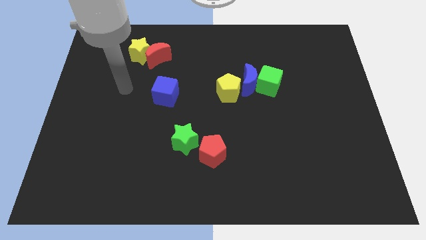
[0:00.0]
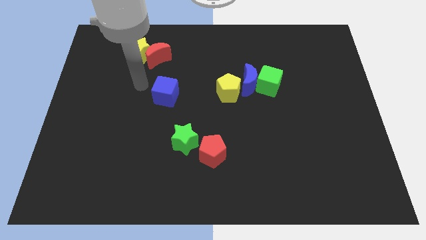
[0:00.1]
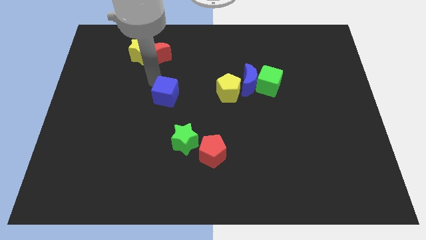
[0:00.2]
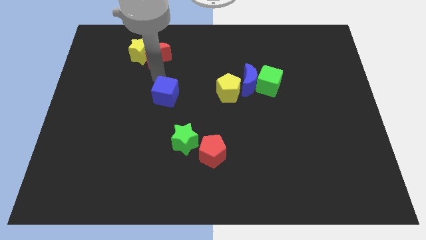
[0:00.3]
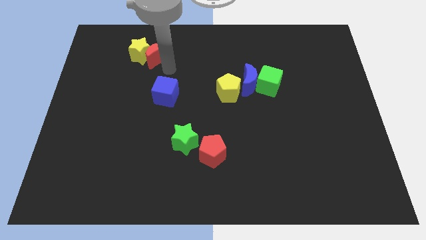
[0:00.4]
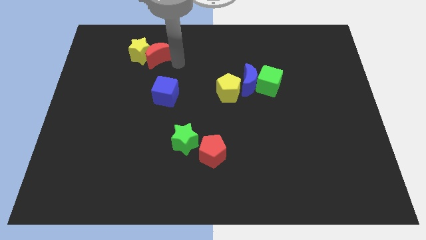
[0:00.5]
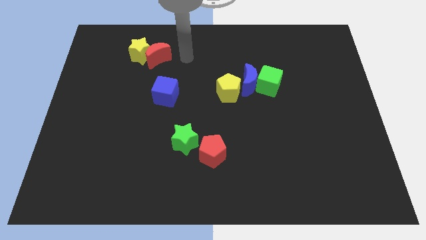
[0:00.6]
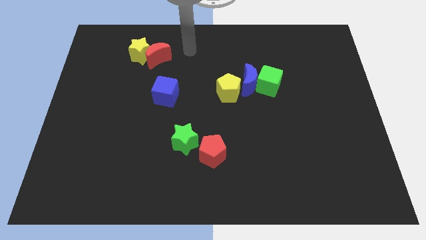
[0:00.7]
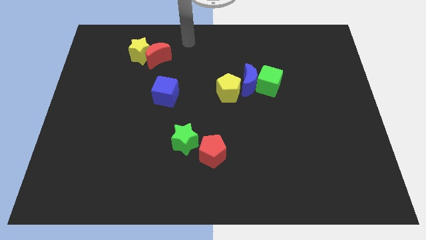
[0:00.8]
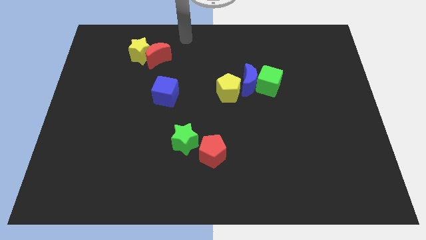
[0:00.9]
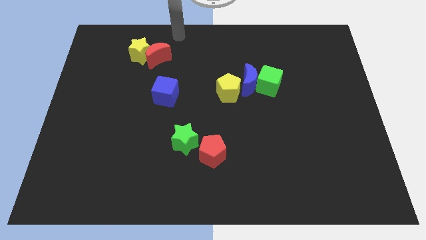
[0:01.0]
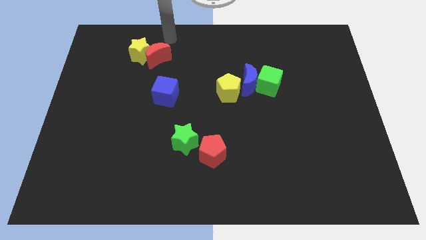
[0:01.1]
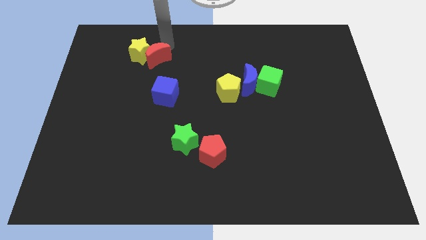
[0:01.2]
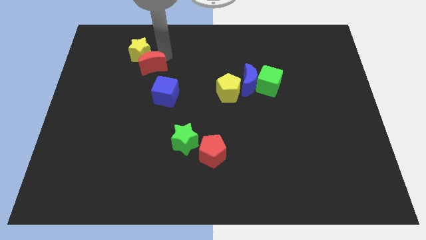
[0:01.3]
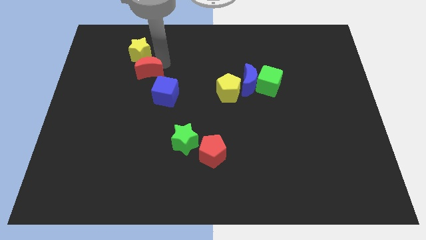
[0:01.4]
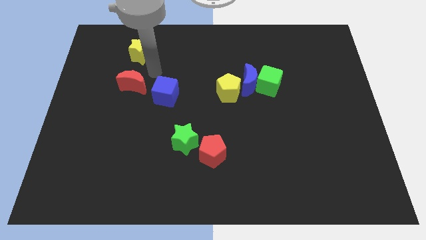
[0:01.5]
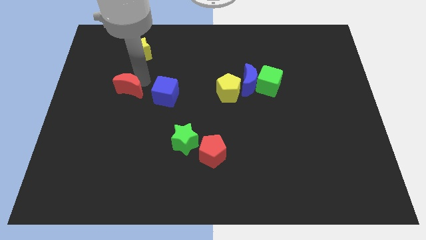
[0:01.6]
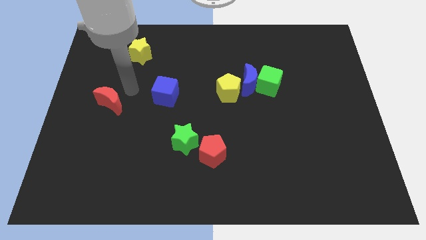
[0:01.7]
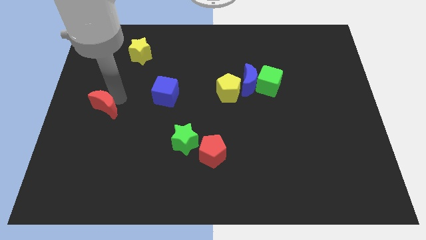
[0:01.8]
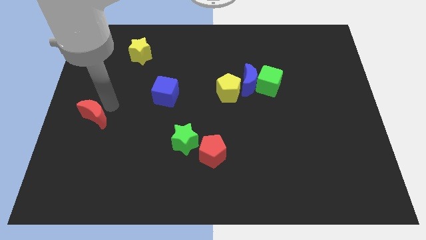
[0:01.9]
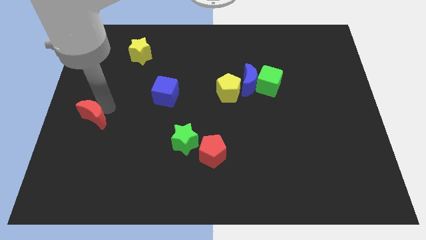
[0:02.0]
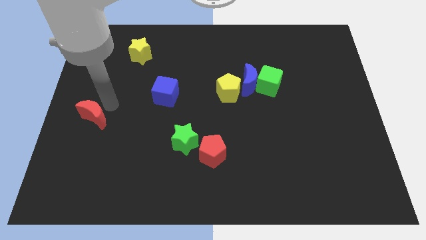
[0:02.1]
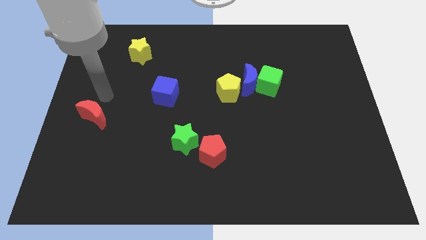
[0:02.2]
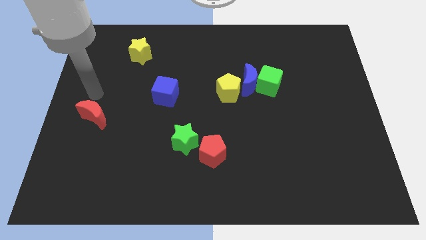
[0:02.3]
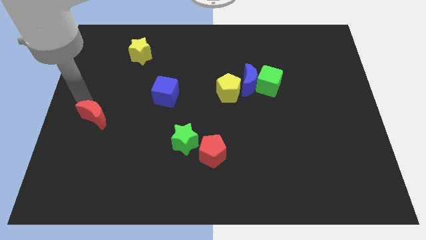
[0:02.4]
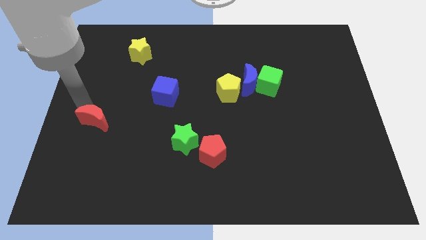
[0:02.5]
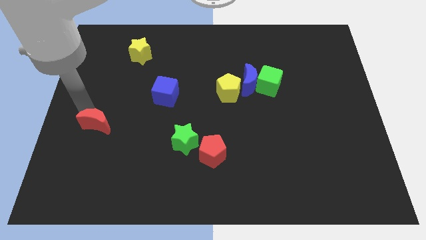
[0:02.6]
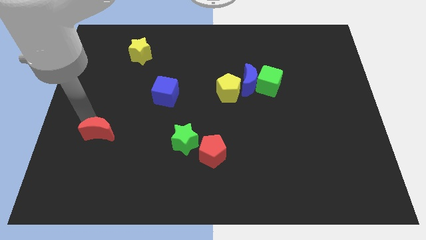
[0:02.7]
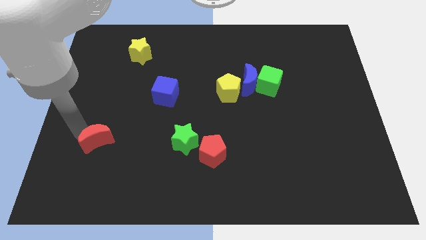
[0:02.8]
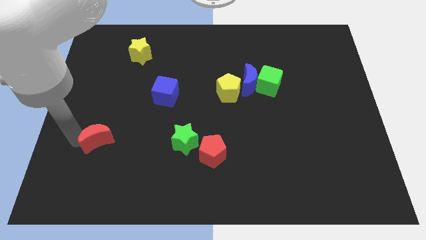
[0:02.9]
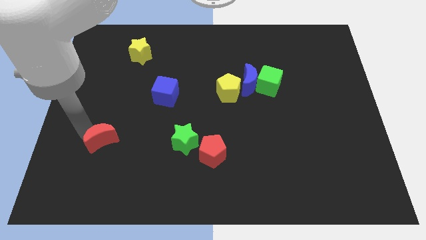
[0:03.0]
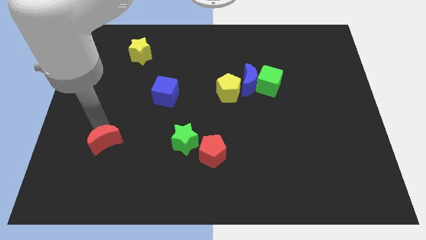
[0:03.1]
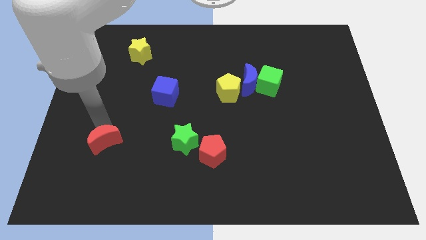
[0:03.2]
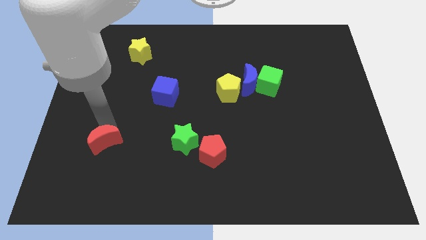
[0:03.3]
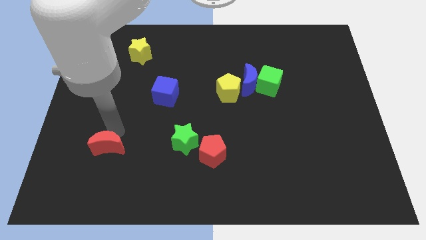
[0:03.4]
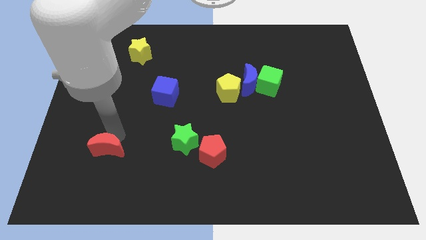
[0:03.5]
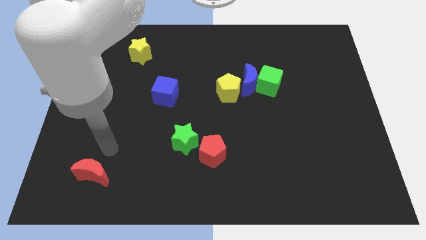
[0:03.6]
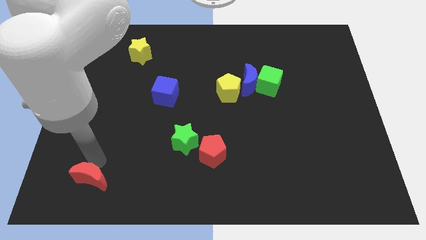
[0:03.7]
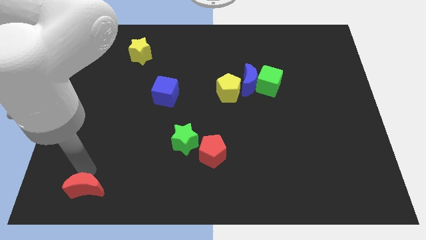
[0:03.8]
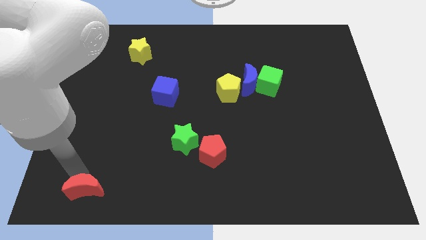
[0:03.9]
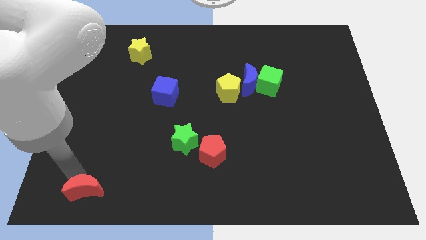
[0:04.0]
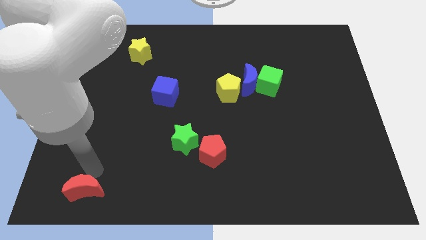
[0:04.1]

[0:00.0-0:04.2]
push the red crescent towards the bottom left of the board

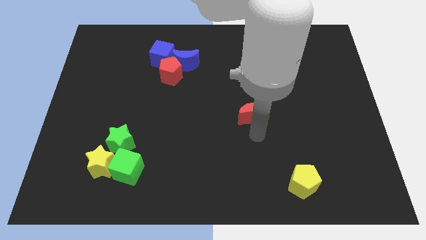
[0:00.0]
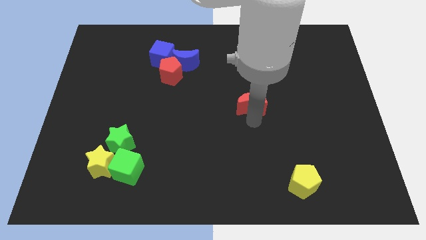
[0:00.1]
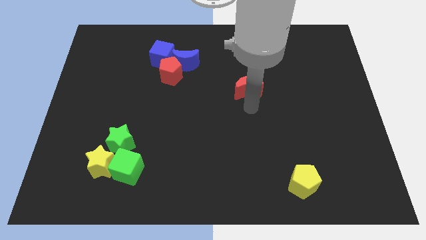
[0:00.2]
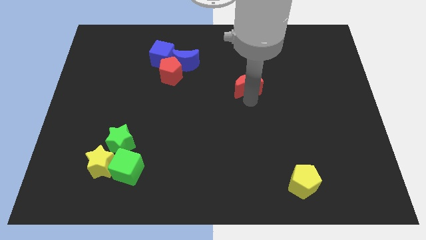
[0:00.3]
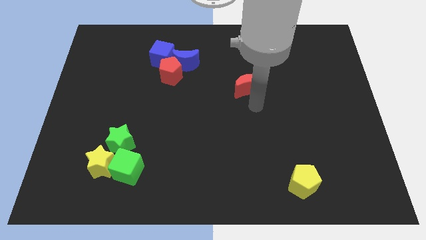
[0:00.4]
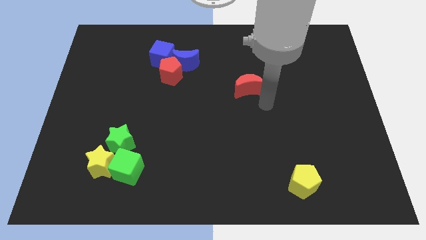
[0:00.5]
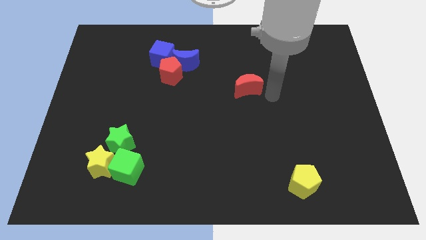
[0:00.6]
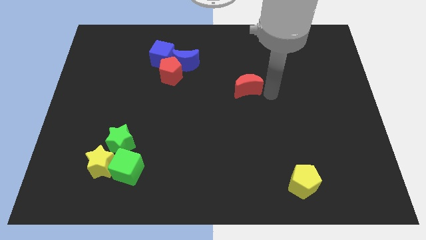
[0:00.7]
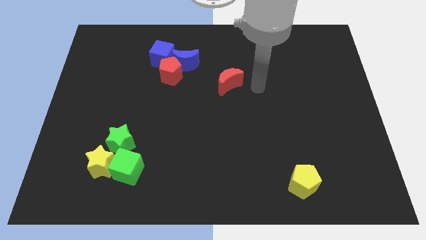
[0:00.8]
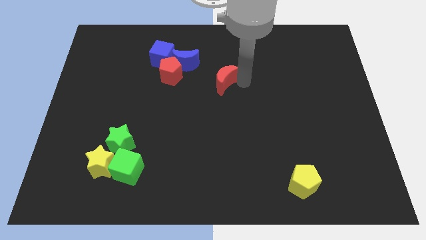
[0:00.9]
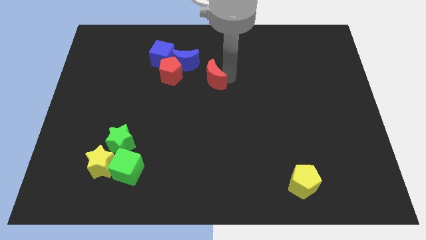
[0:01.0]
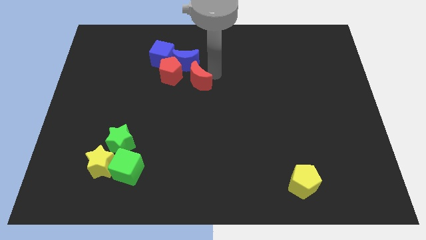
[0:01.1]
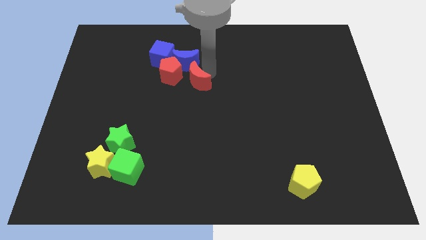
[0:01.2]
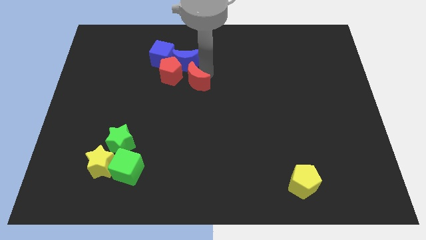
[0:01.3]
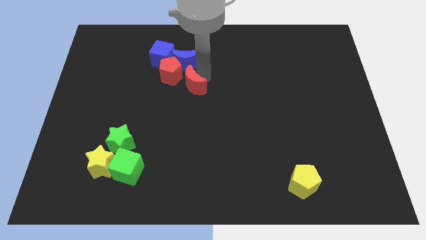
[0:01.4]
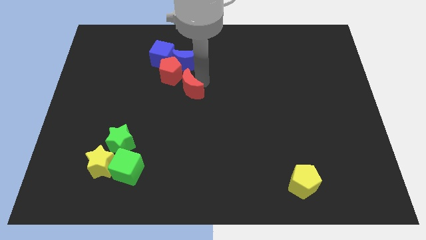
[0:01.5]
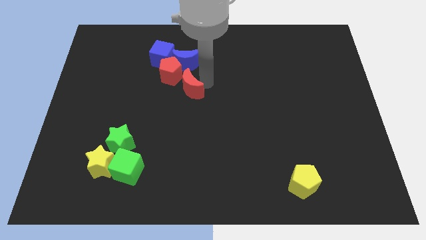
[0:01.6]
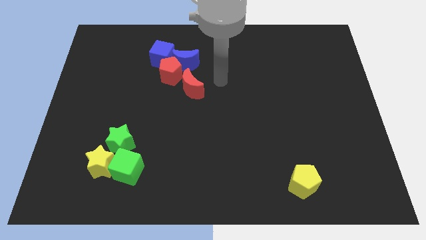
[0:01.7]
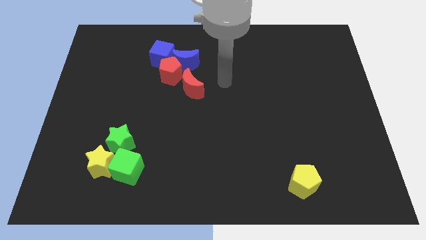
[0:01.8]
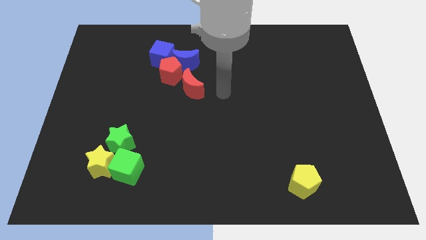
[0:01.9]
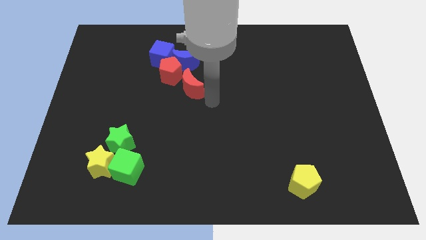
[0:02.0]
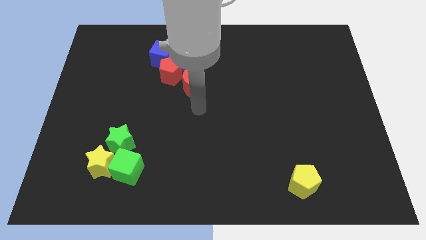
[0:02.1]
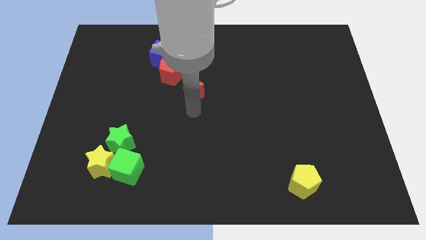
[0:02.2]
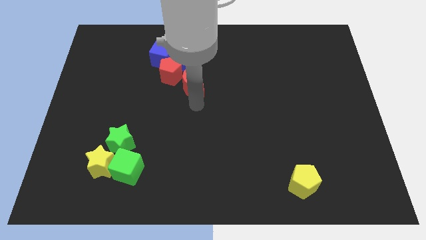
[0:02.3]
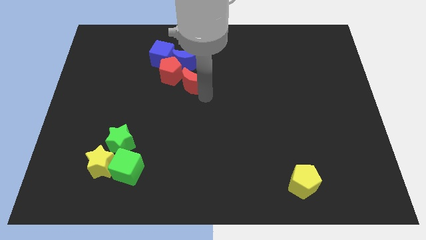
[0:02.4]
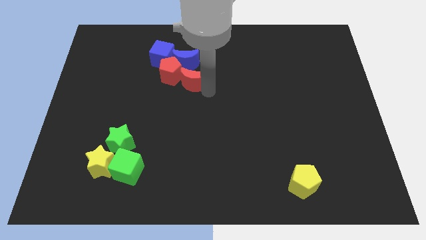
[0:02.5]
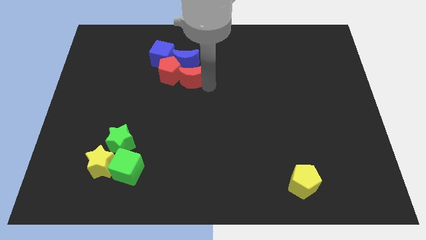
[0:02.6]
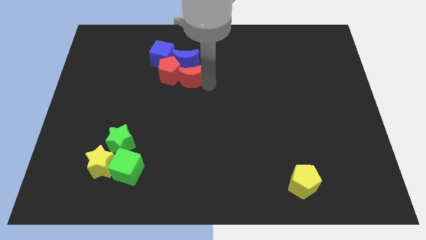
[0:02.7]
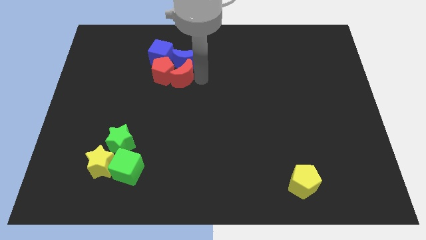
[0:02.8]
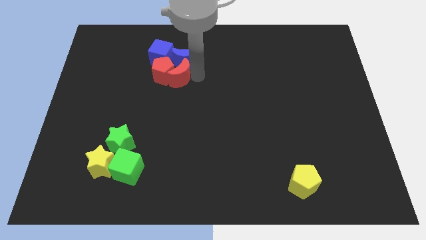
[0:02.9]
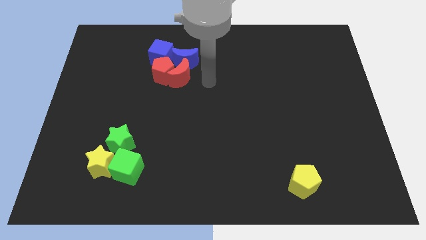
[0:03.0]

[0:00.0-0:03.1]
push the red crescent into the group of blocks

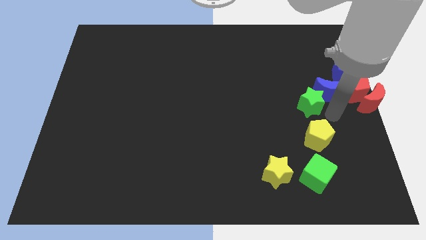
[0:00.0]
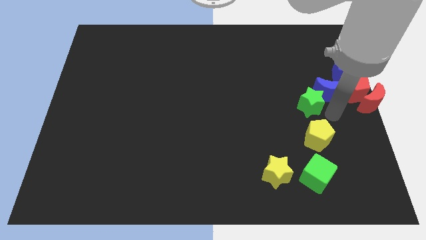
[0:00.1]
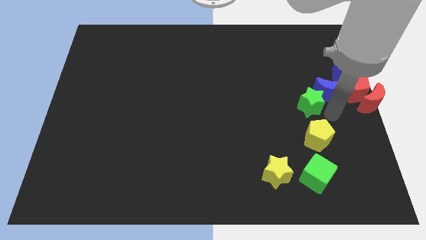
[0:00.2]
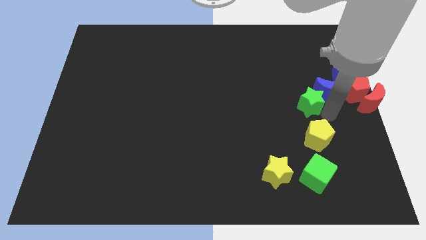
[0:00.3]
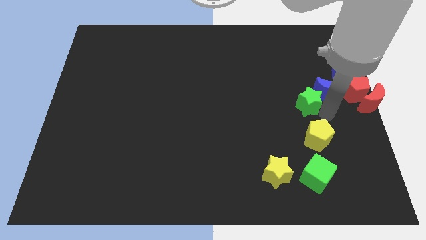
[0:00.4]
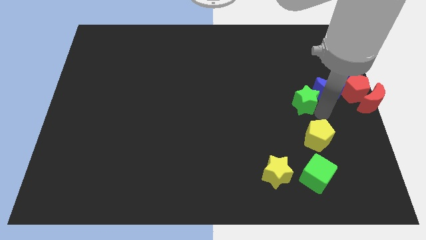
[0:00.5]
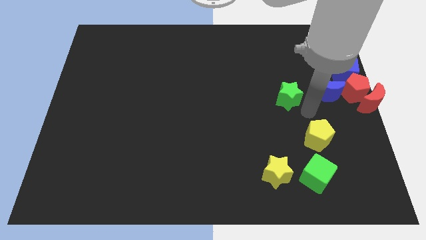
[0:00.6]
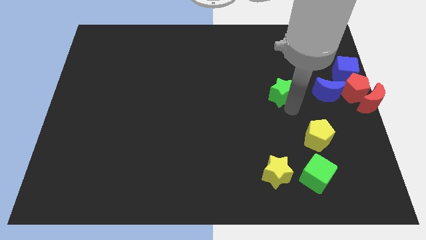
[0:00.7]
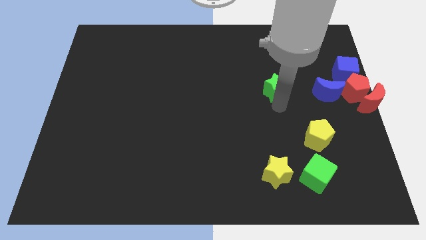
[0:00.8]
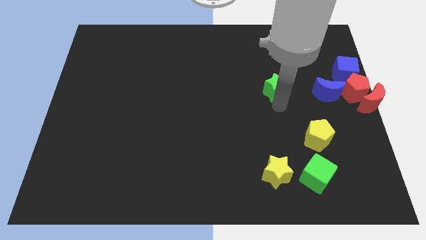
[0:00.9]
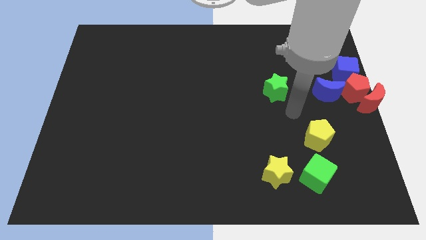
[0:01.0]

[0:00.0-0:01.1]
place green star to the left of blue moon

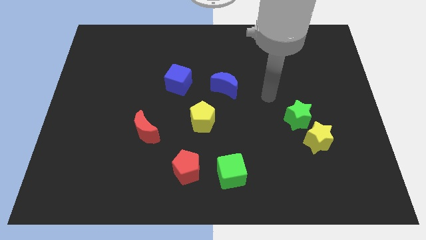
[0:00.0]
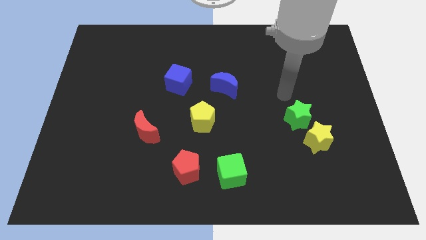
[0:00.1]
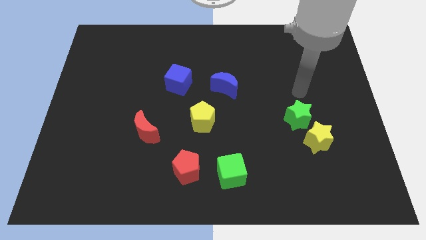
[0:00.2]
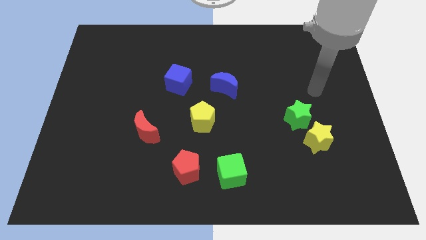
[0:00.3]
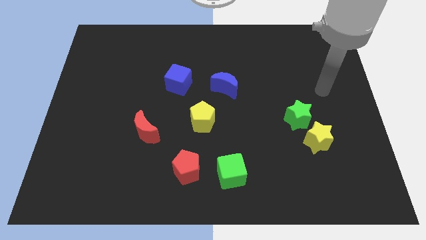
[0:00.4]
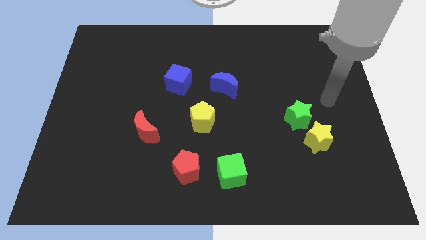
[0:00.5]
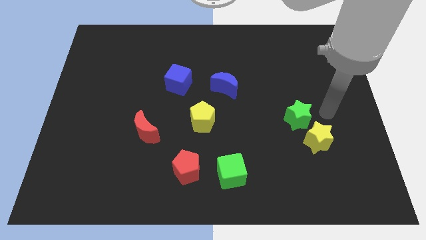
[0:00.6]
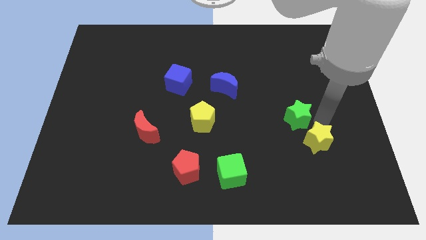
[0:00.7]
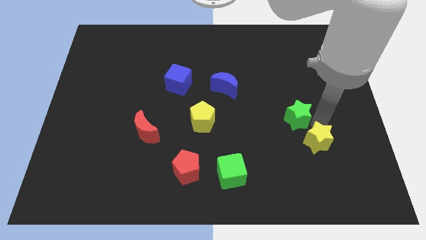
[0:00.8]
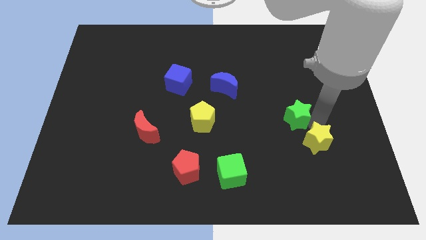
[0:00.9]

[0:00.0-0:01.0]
move arm right to the green star
